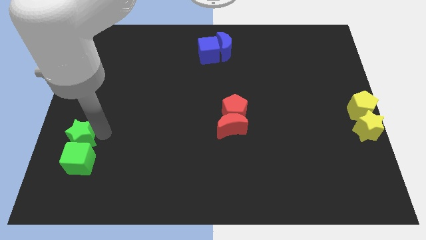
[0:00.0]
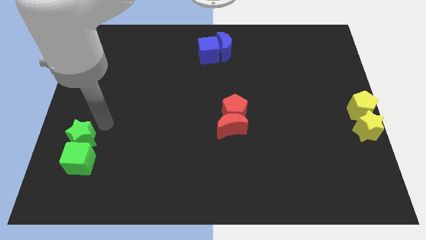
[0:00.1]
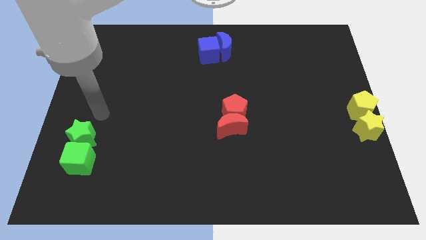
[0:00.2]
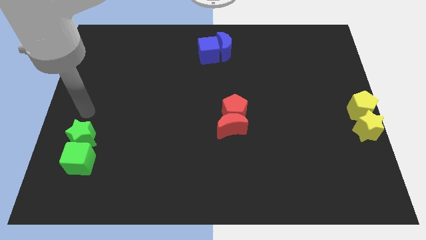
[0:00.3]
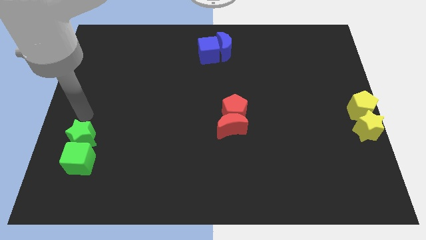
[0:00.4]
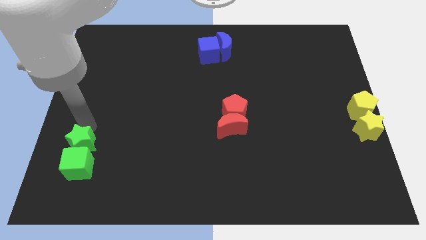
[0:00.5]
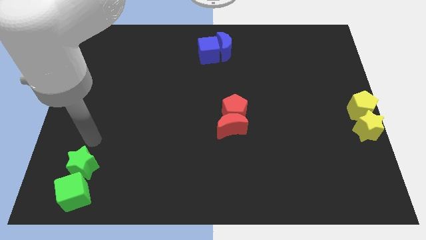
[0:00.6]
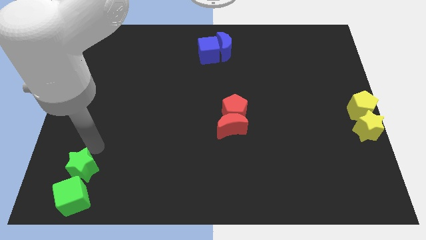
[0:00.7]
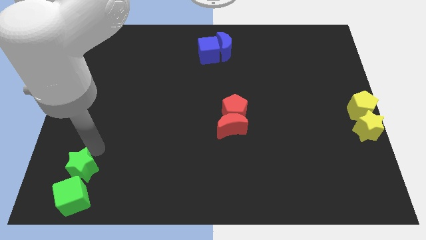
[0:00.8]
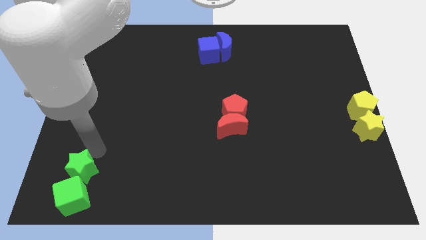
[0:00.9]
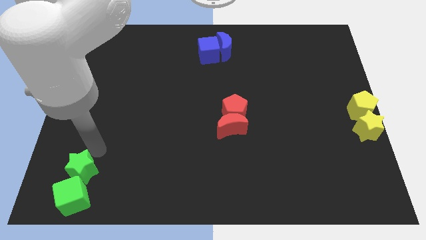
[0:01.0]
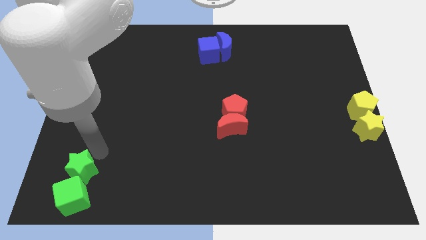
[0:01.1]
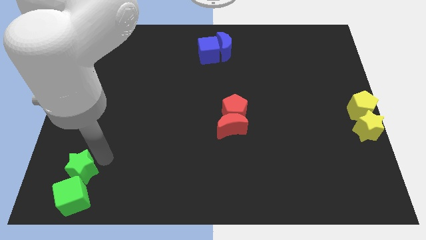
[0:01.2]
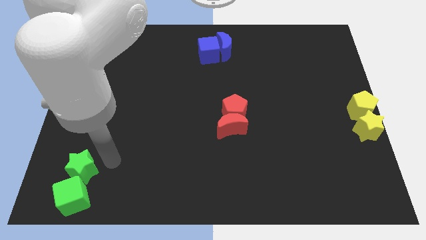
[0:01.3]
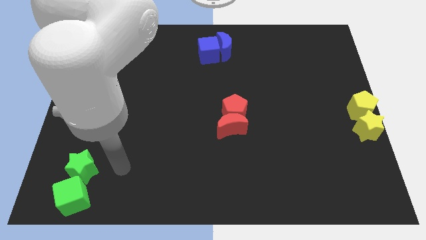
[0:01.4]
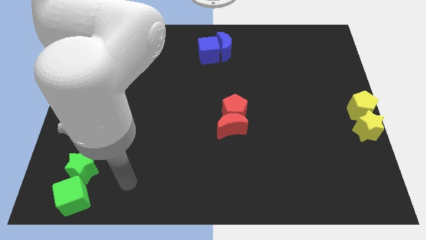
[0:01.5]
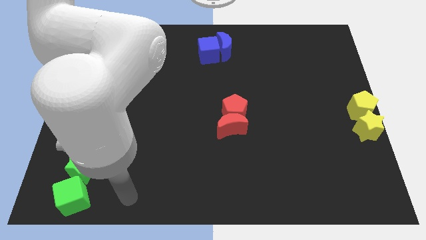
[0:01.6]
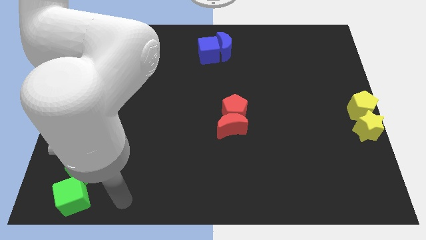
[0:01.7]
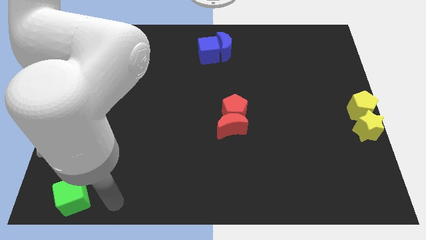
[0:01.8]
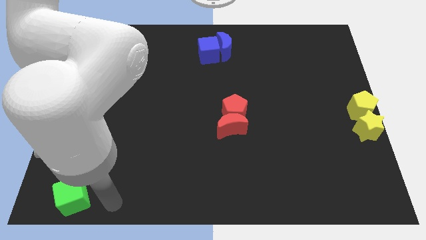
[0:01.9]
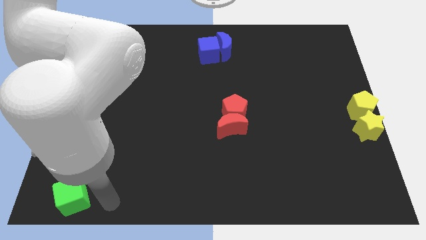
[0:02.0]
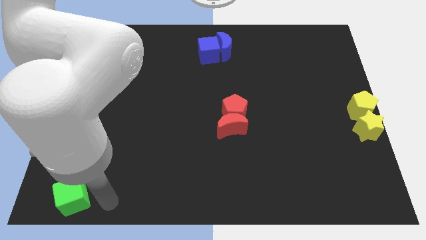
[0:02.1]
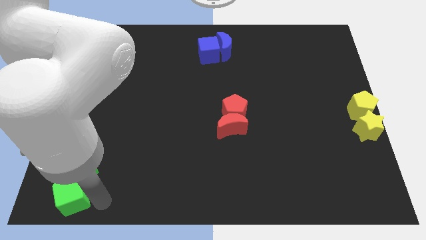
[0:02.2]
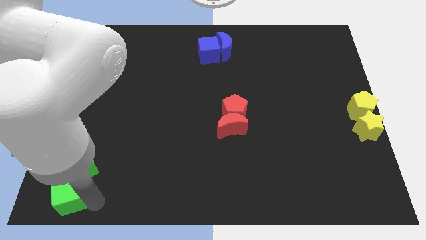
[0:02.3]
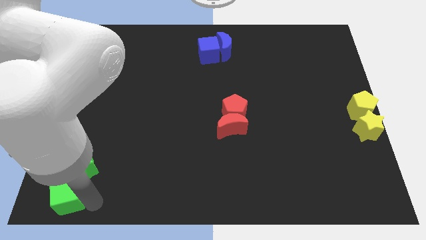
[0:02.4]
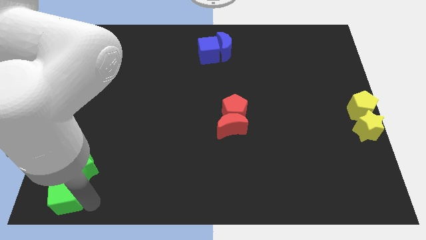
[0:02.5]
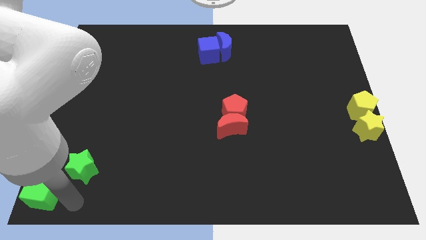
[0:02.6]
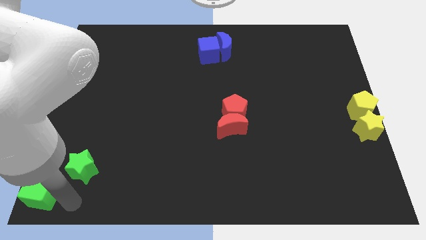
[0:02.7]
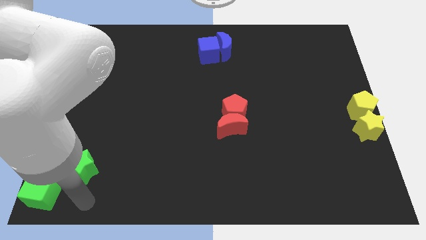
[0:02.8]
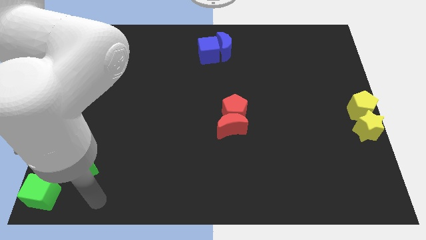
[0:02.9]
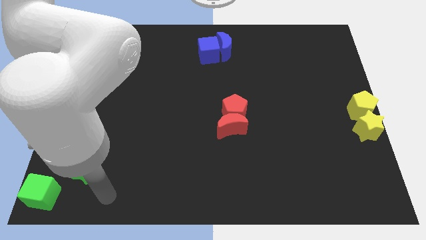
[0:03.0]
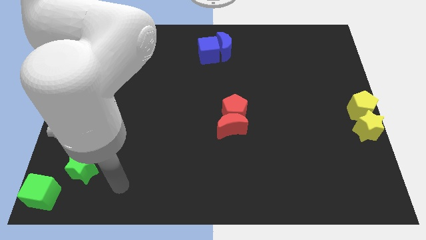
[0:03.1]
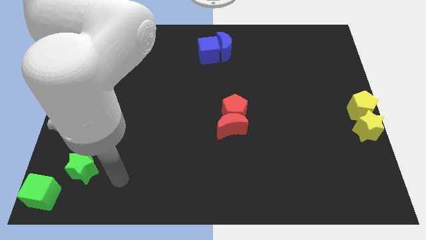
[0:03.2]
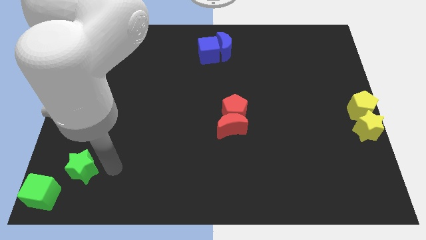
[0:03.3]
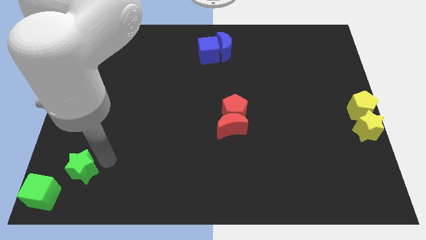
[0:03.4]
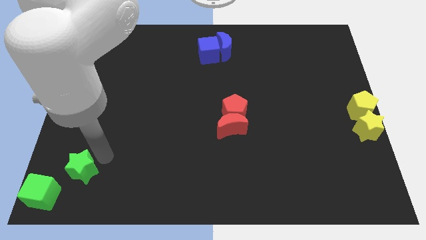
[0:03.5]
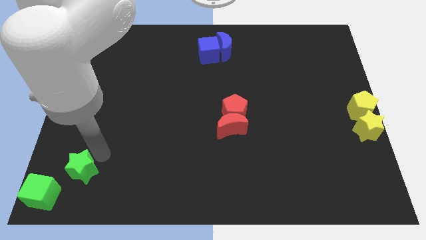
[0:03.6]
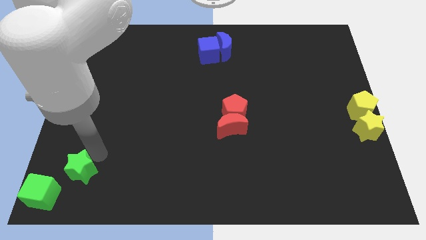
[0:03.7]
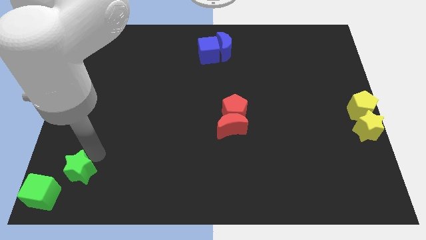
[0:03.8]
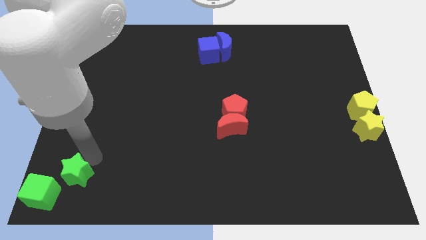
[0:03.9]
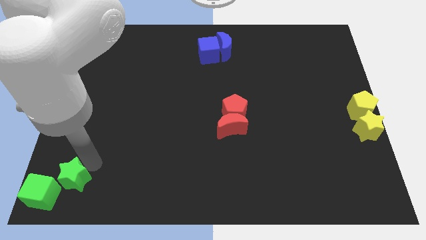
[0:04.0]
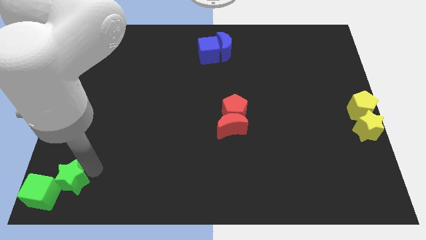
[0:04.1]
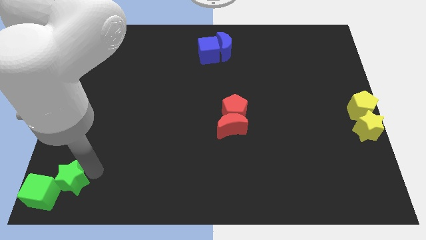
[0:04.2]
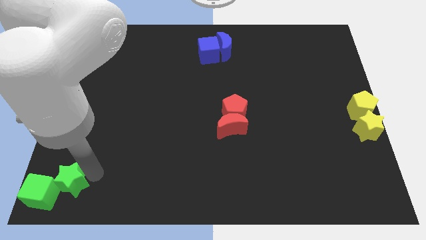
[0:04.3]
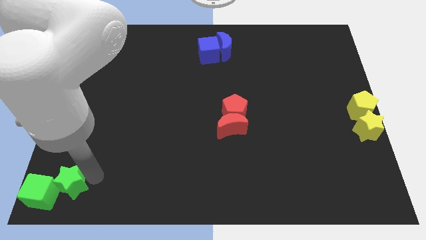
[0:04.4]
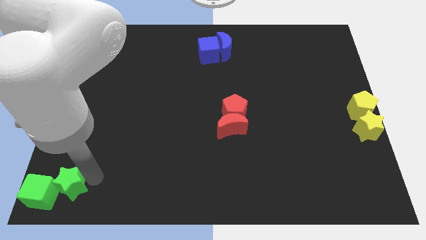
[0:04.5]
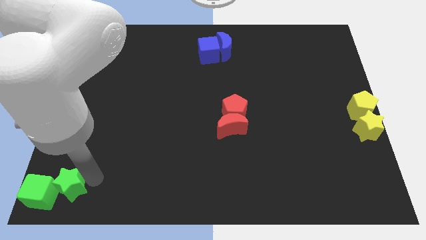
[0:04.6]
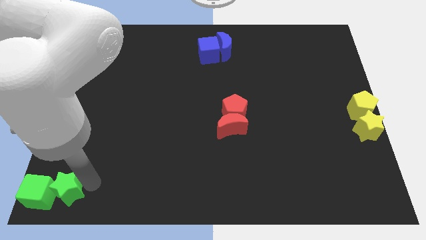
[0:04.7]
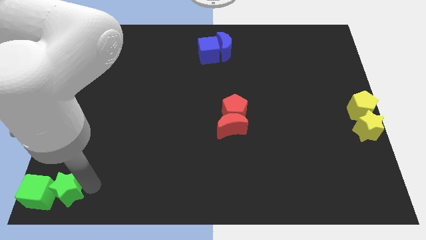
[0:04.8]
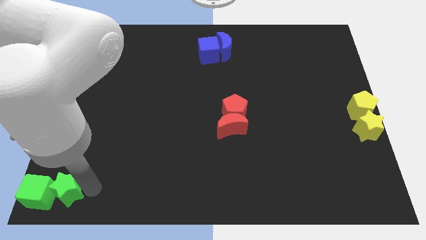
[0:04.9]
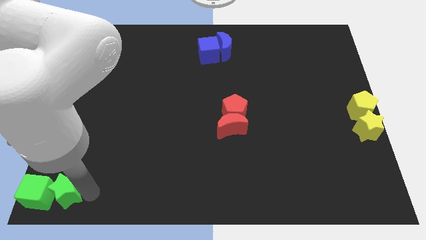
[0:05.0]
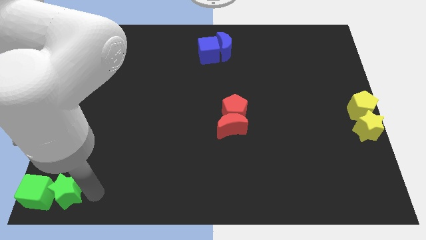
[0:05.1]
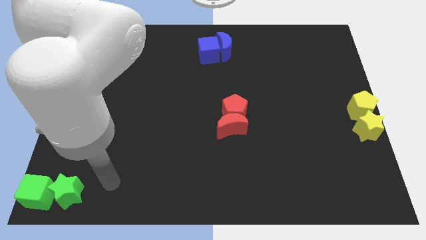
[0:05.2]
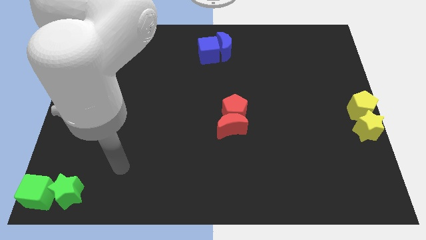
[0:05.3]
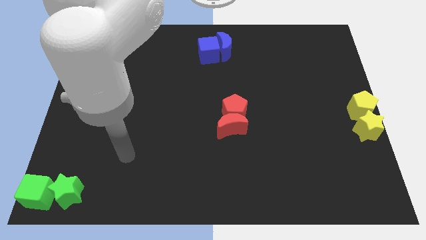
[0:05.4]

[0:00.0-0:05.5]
push the green blocks to the bottom left corner of the board

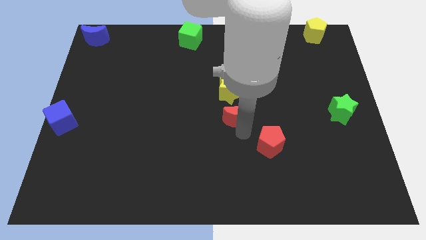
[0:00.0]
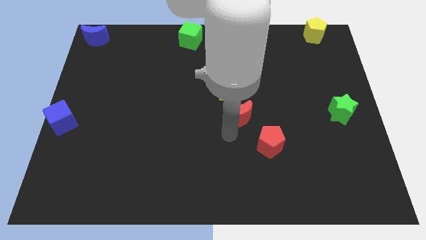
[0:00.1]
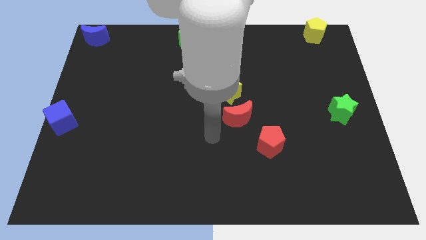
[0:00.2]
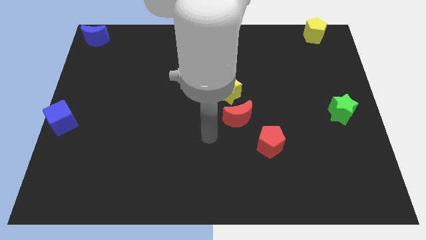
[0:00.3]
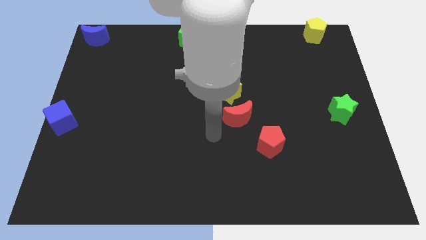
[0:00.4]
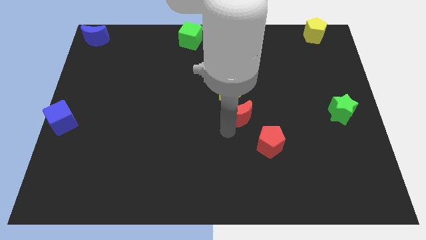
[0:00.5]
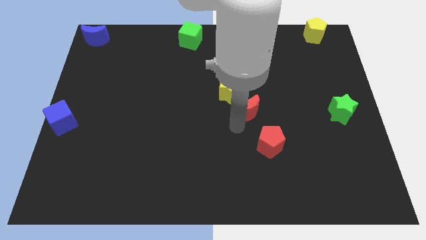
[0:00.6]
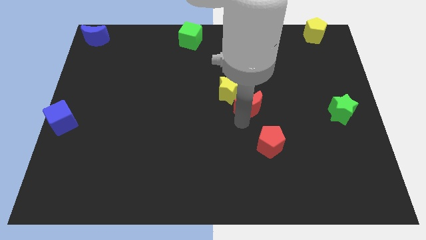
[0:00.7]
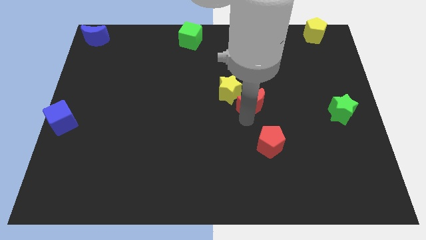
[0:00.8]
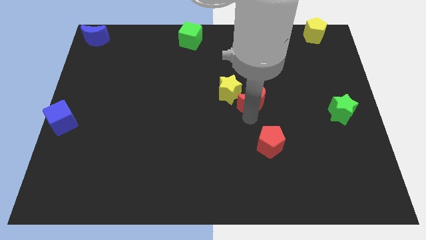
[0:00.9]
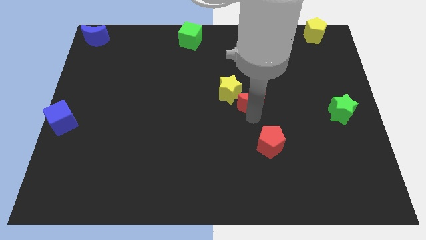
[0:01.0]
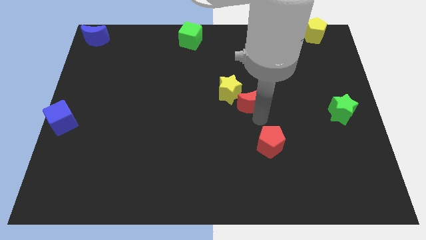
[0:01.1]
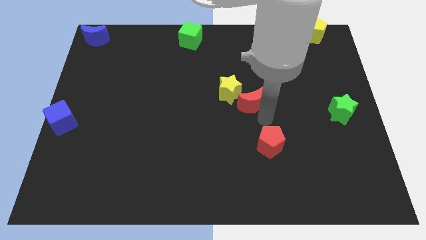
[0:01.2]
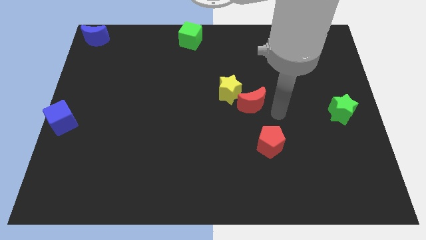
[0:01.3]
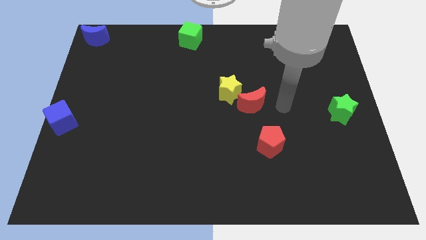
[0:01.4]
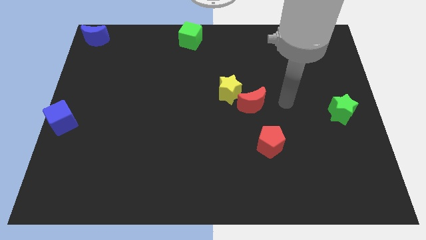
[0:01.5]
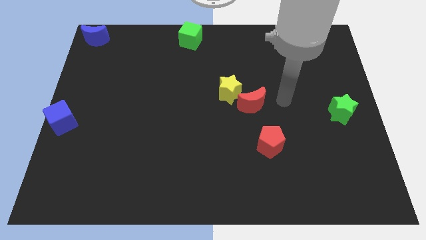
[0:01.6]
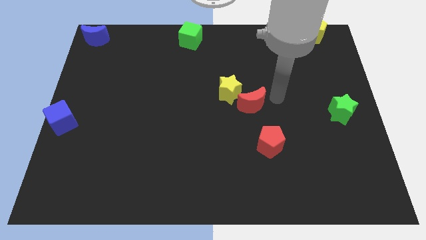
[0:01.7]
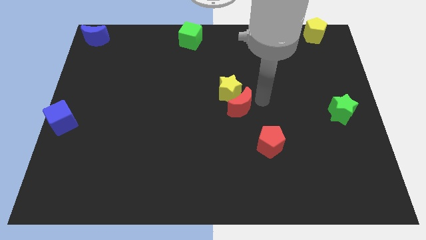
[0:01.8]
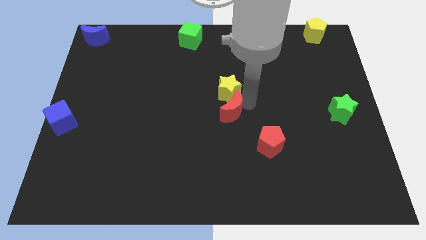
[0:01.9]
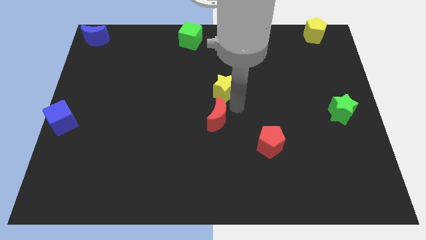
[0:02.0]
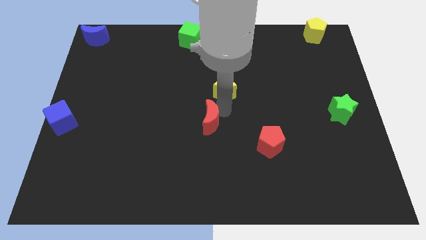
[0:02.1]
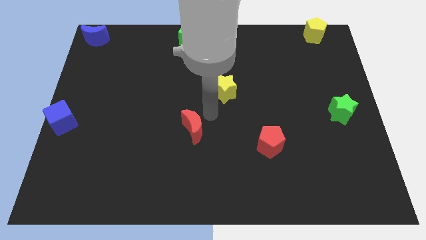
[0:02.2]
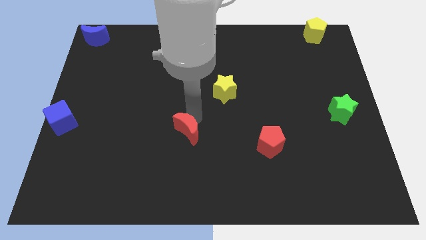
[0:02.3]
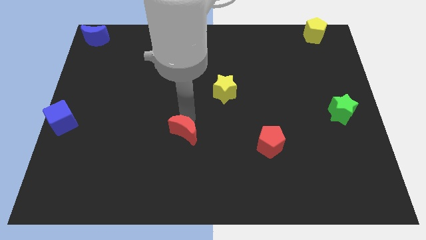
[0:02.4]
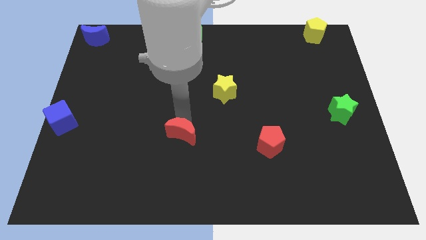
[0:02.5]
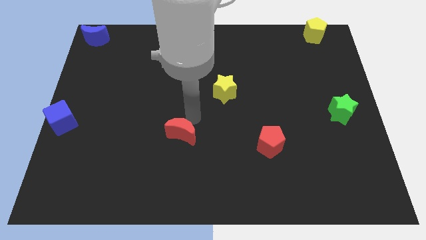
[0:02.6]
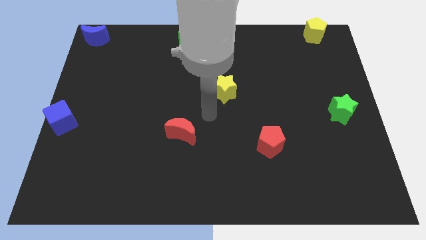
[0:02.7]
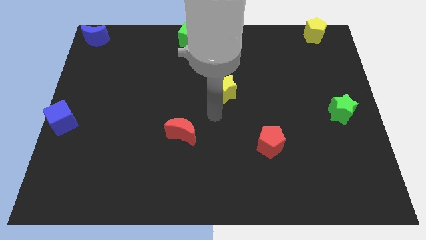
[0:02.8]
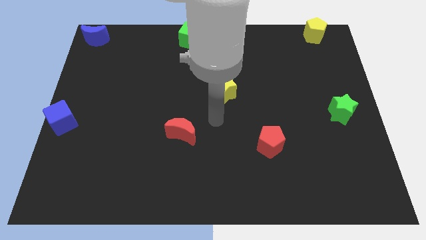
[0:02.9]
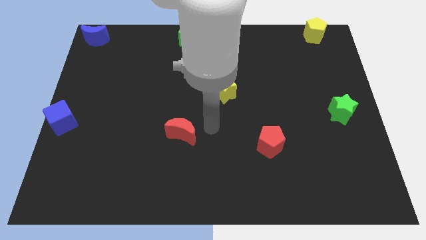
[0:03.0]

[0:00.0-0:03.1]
push the red crescent to the bottom left of the yellow star

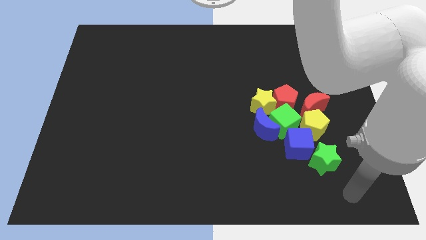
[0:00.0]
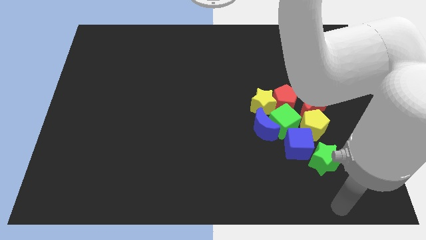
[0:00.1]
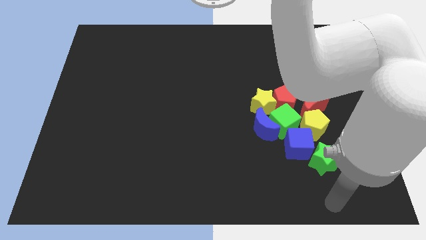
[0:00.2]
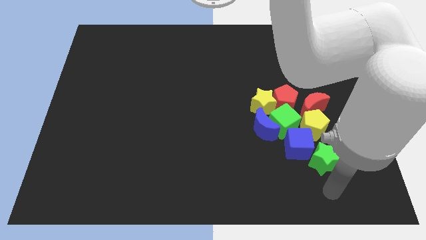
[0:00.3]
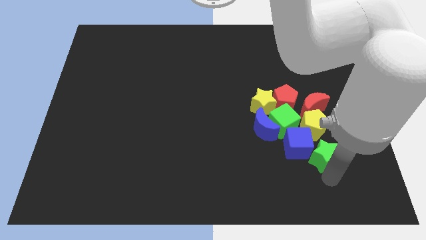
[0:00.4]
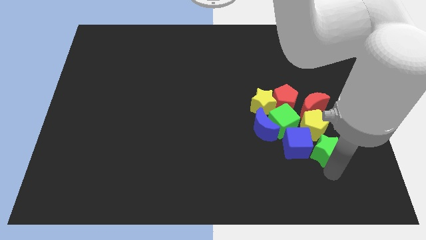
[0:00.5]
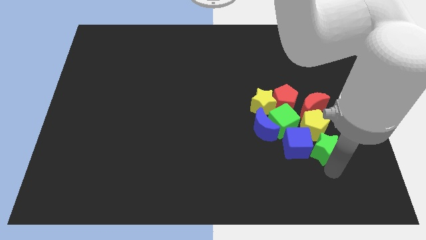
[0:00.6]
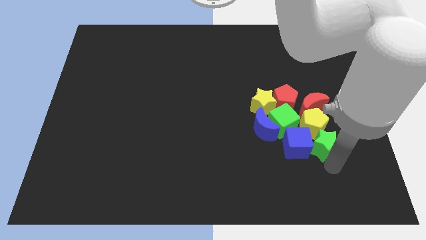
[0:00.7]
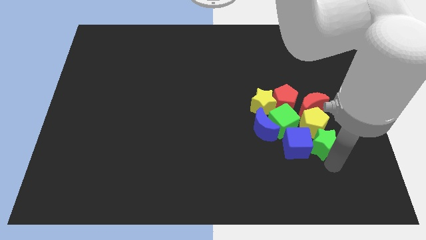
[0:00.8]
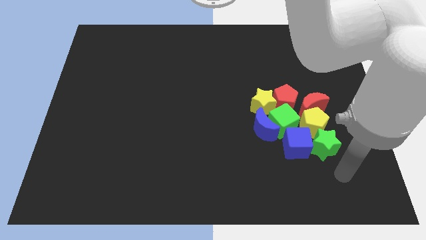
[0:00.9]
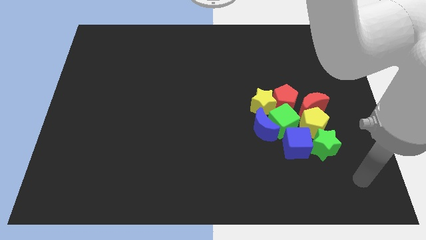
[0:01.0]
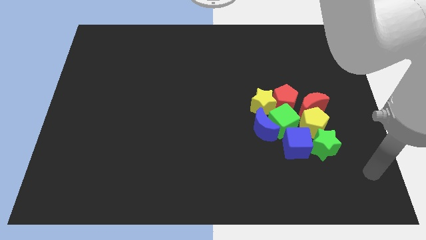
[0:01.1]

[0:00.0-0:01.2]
move the green star to the right of the blue cube
